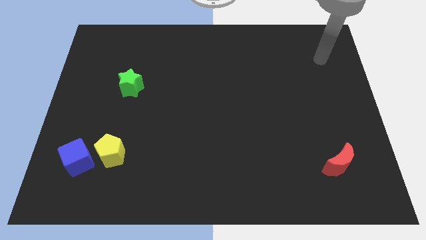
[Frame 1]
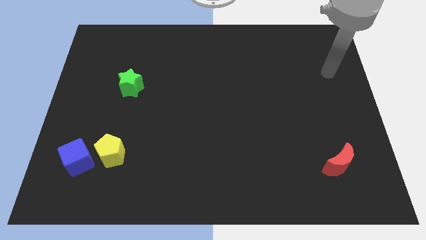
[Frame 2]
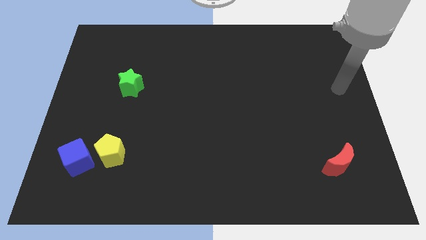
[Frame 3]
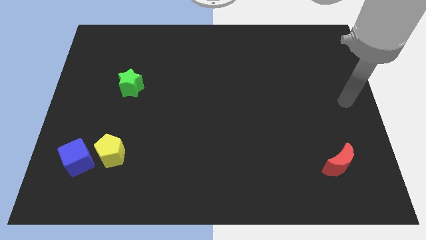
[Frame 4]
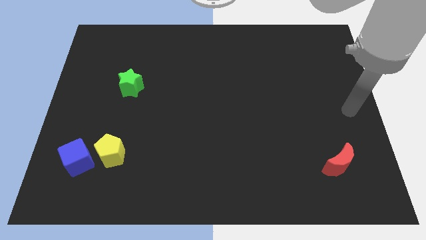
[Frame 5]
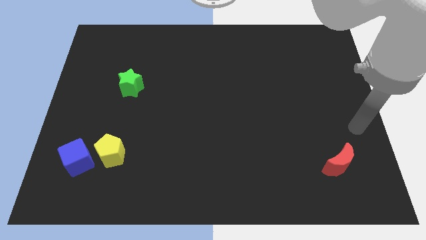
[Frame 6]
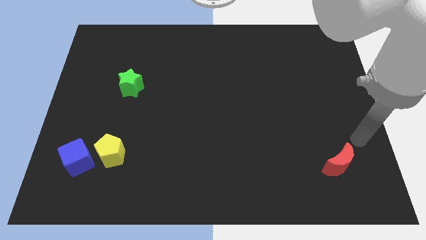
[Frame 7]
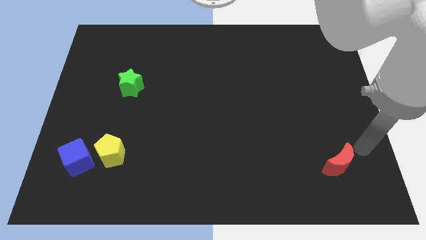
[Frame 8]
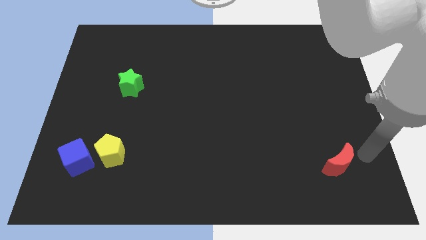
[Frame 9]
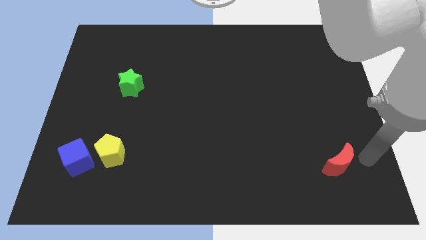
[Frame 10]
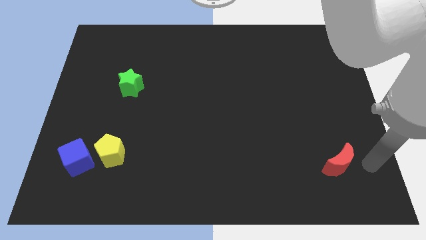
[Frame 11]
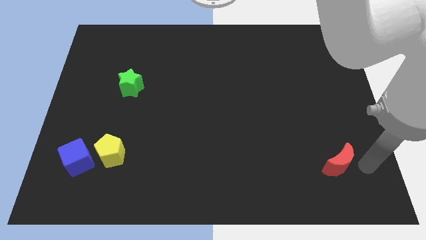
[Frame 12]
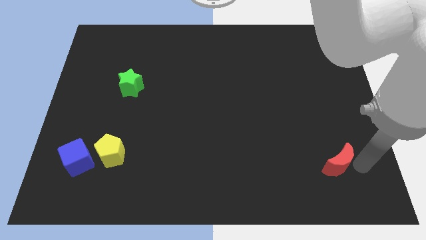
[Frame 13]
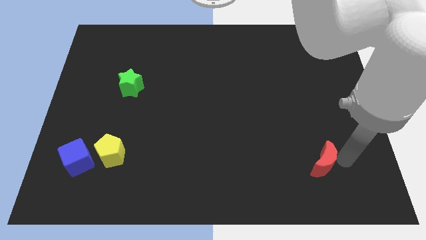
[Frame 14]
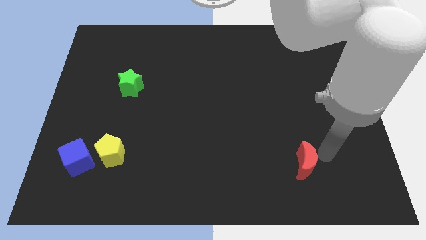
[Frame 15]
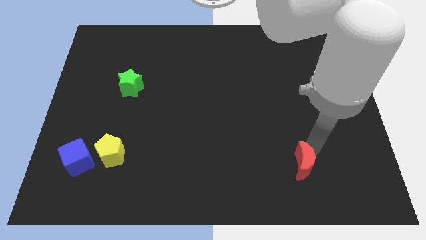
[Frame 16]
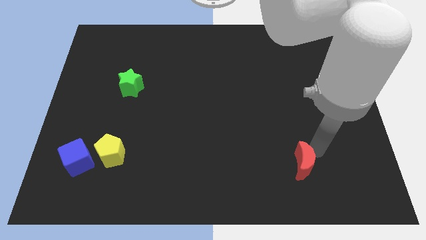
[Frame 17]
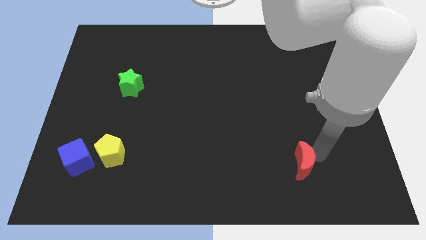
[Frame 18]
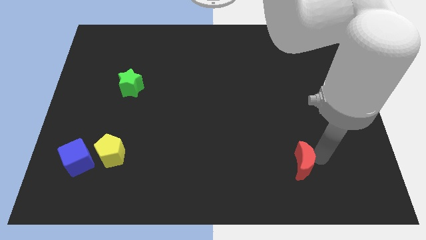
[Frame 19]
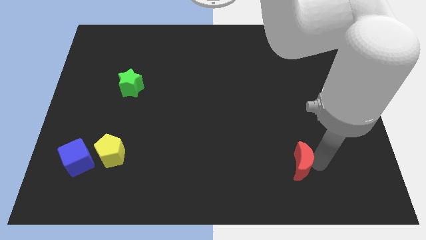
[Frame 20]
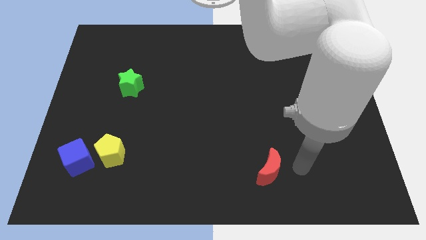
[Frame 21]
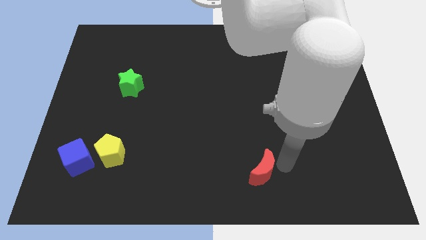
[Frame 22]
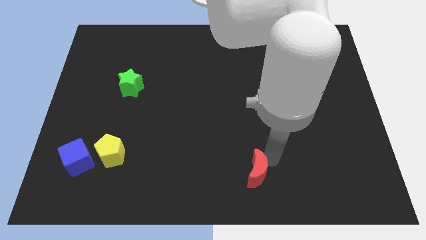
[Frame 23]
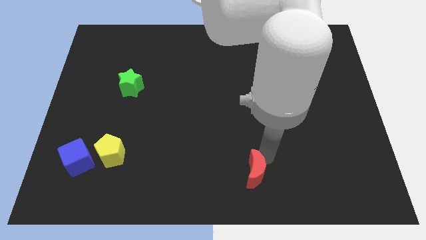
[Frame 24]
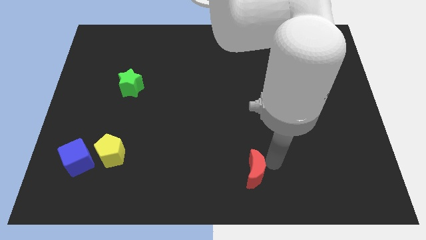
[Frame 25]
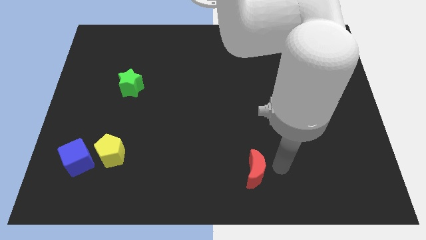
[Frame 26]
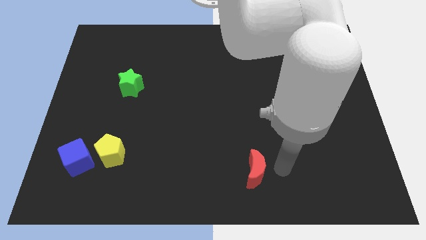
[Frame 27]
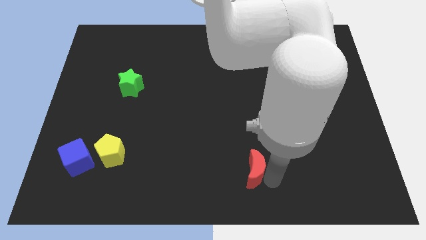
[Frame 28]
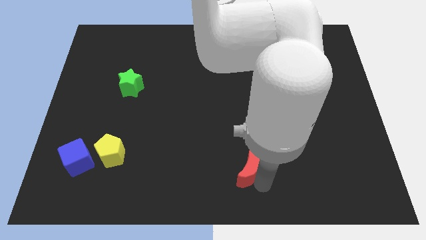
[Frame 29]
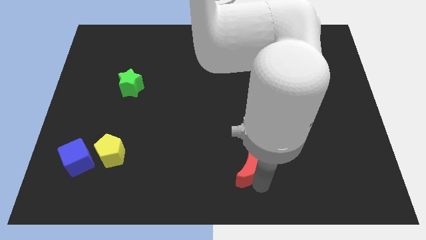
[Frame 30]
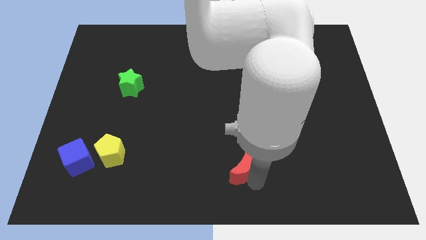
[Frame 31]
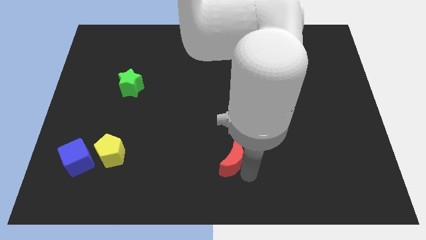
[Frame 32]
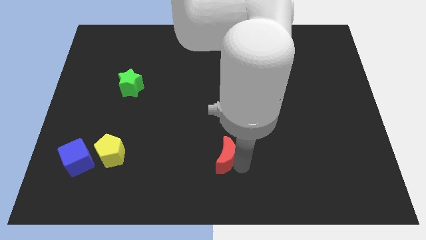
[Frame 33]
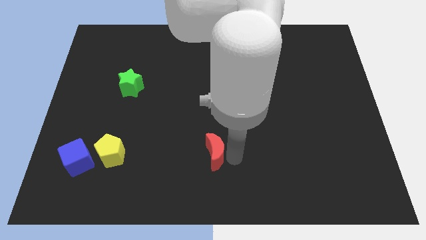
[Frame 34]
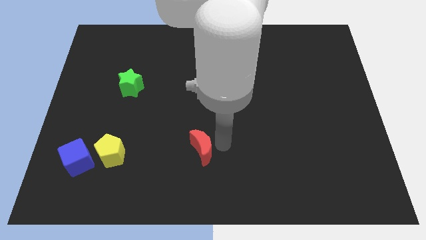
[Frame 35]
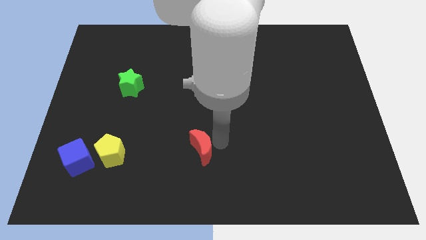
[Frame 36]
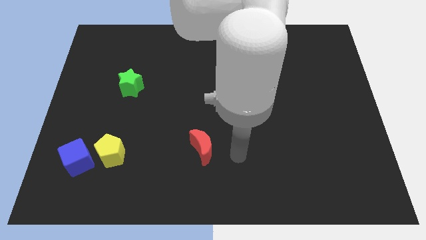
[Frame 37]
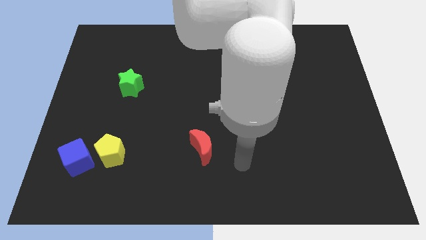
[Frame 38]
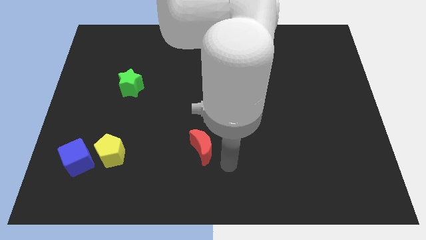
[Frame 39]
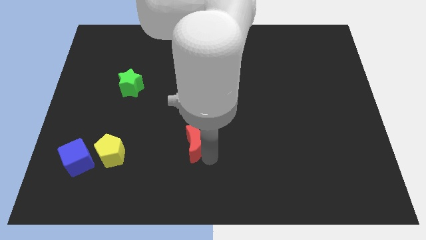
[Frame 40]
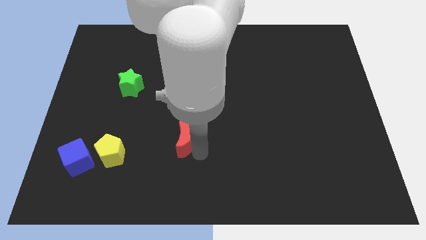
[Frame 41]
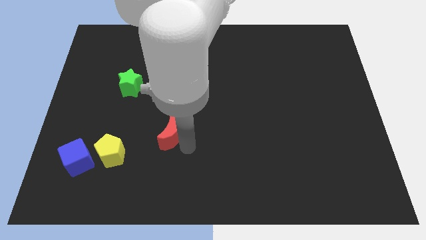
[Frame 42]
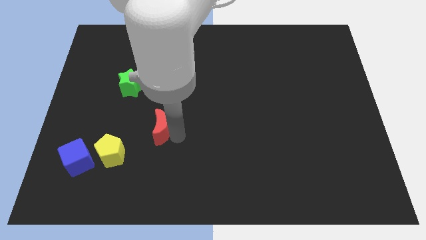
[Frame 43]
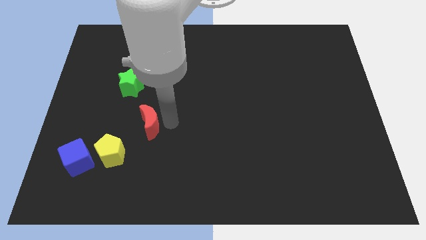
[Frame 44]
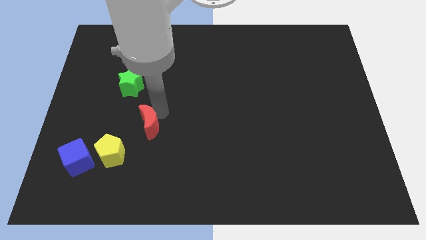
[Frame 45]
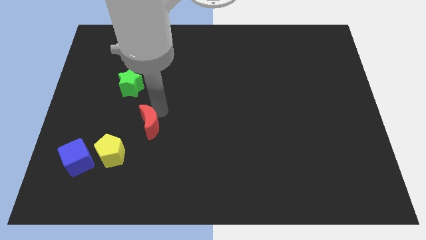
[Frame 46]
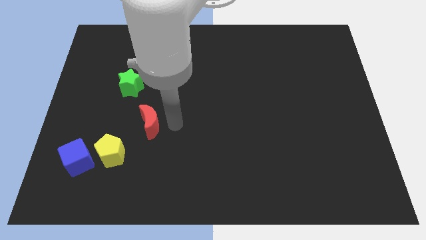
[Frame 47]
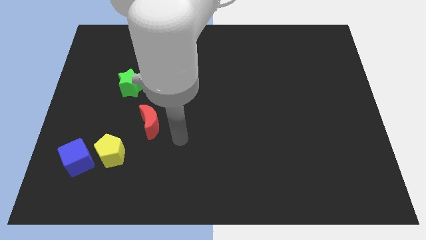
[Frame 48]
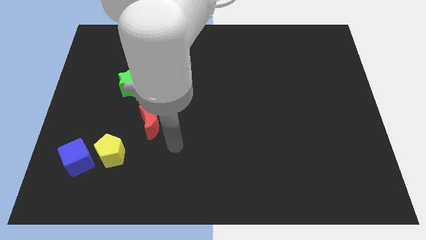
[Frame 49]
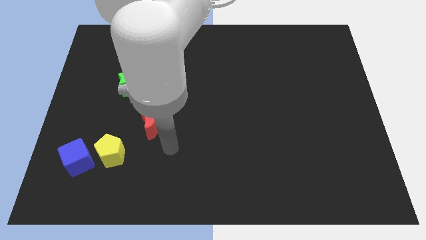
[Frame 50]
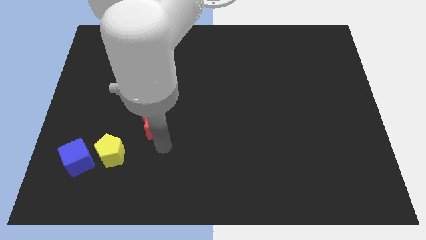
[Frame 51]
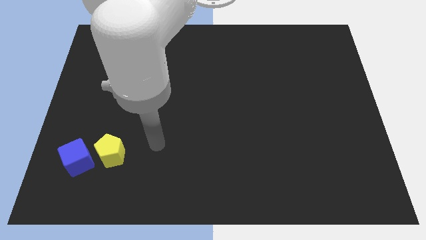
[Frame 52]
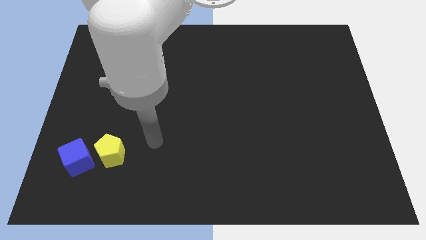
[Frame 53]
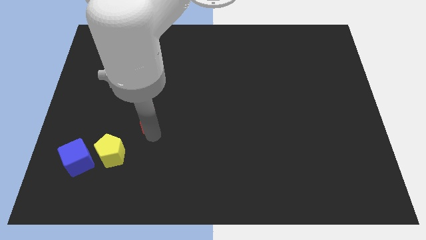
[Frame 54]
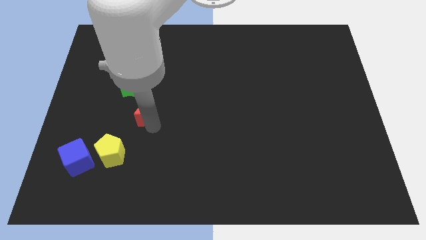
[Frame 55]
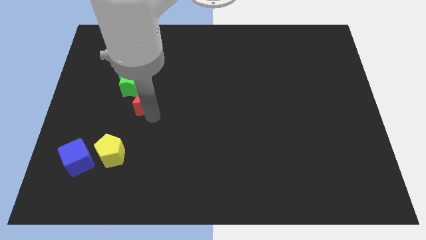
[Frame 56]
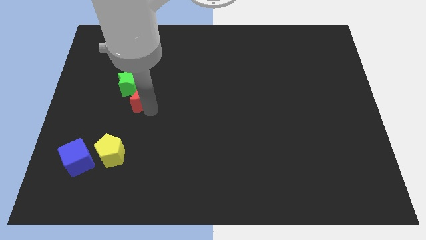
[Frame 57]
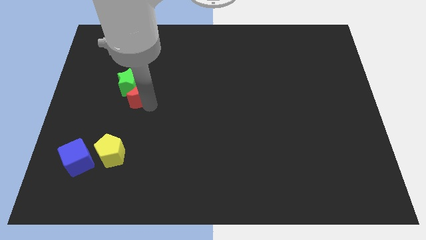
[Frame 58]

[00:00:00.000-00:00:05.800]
put the red moon close to the green star

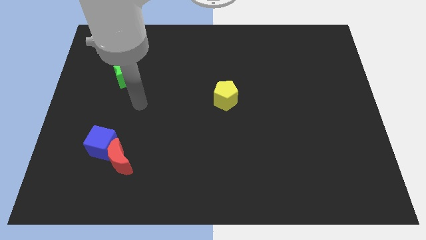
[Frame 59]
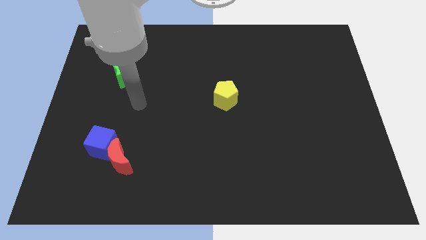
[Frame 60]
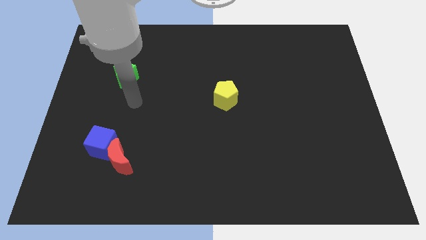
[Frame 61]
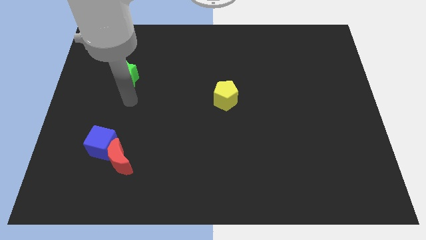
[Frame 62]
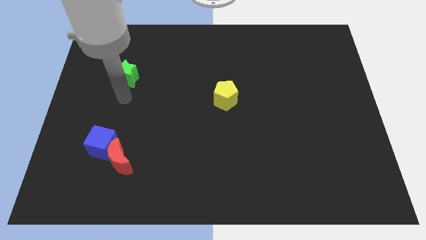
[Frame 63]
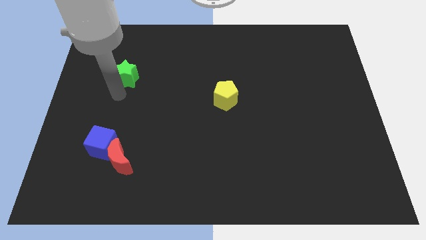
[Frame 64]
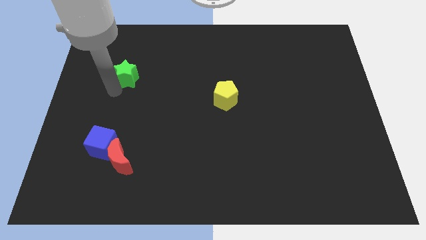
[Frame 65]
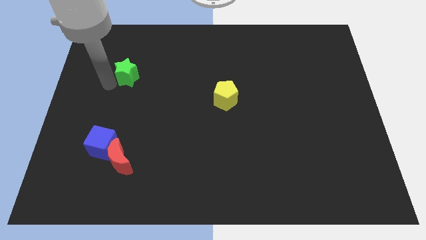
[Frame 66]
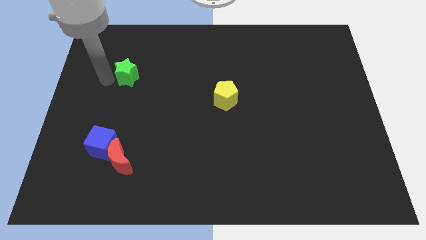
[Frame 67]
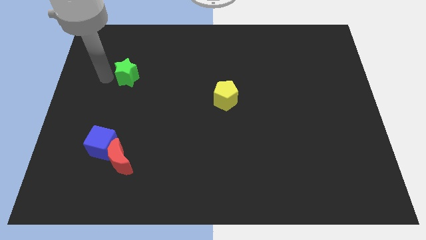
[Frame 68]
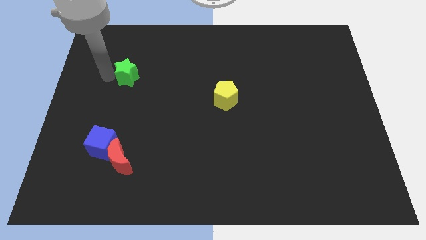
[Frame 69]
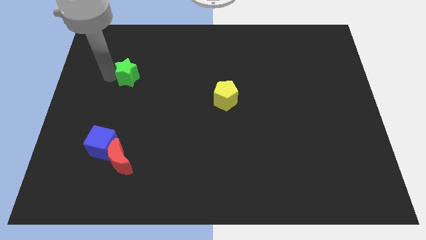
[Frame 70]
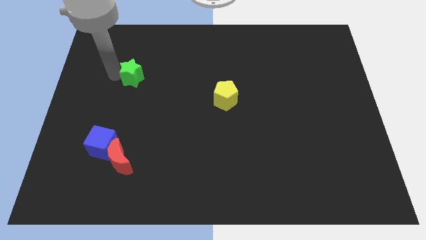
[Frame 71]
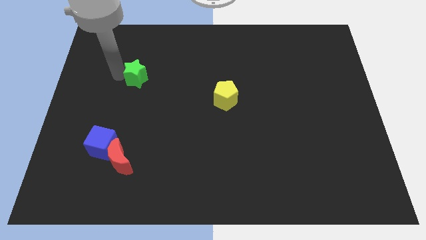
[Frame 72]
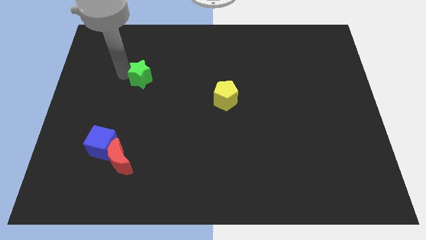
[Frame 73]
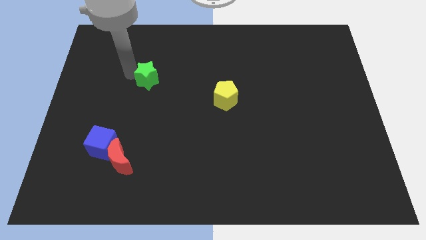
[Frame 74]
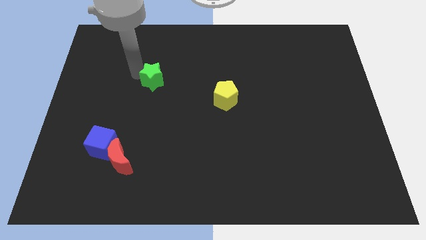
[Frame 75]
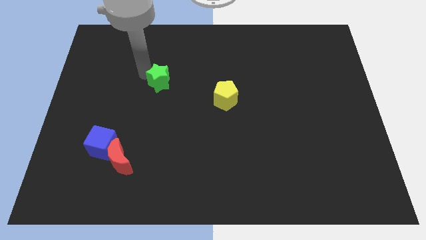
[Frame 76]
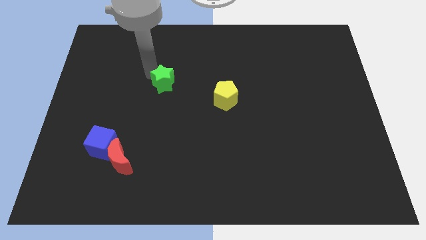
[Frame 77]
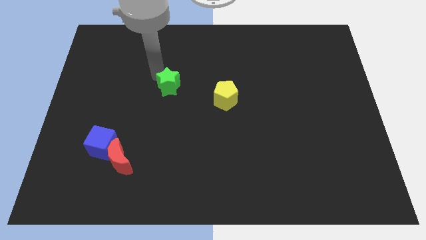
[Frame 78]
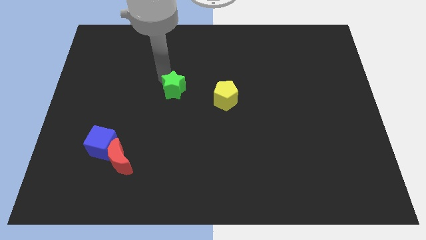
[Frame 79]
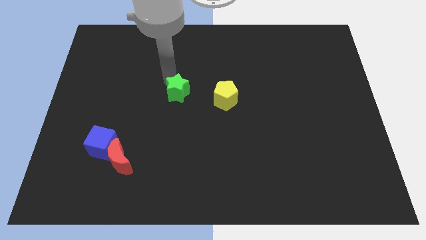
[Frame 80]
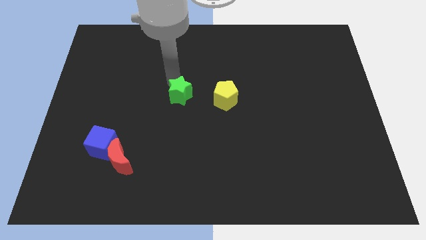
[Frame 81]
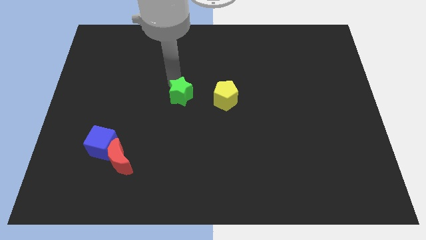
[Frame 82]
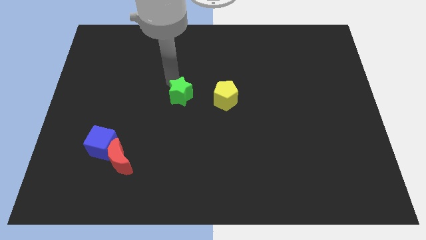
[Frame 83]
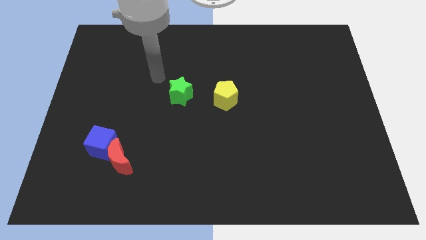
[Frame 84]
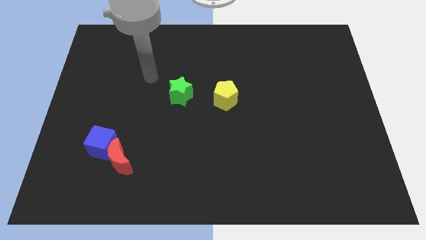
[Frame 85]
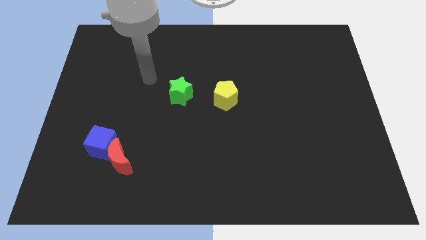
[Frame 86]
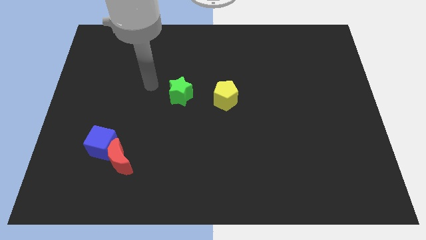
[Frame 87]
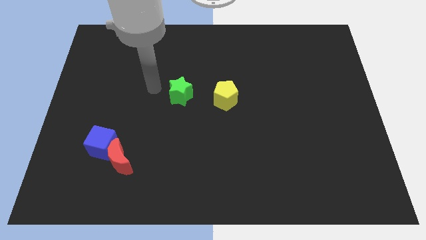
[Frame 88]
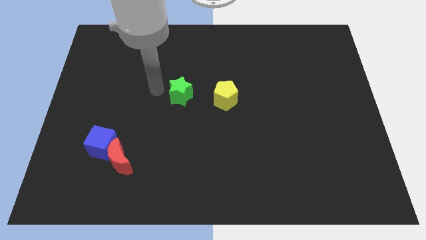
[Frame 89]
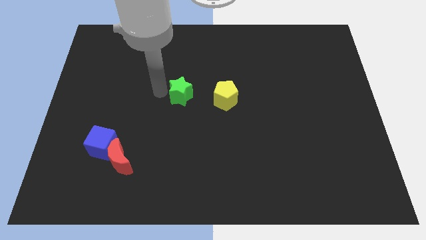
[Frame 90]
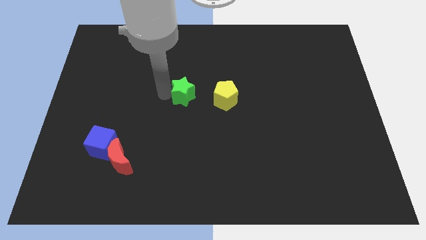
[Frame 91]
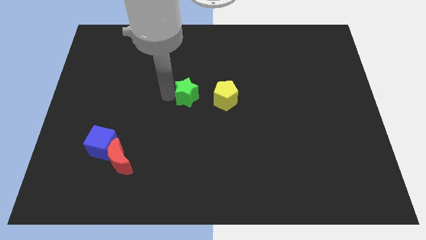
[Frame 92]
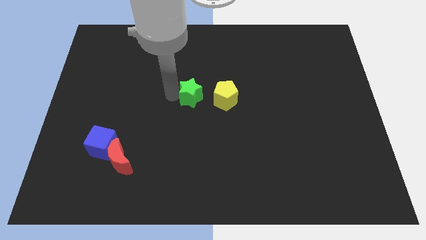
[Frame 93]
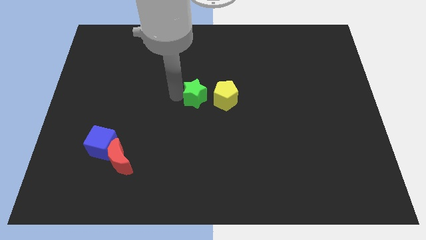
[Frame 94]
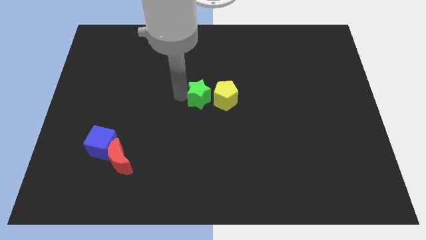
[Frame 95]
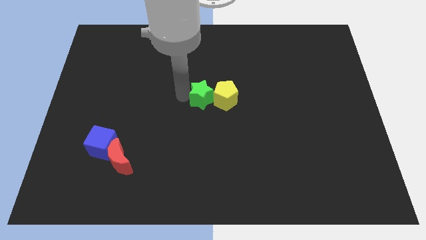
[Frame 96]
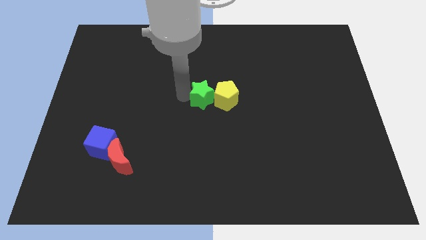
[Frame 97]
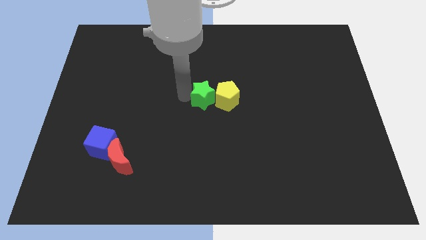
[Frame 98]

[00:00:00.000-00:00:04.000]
put the star towards the pentagon
